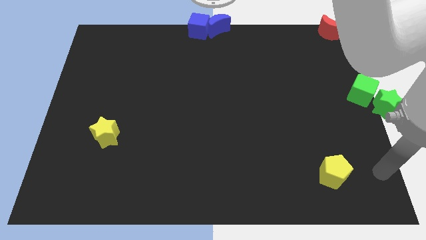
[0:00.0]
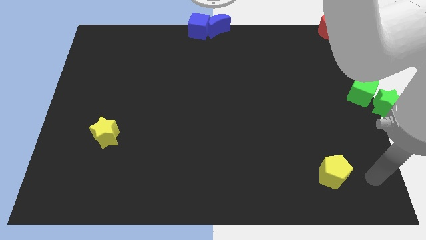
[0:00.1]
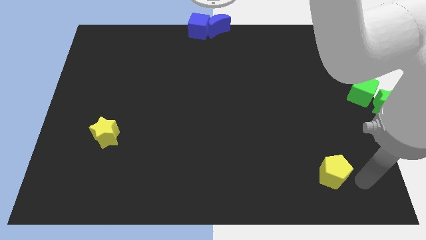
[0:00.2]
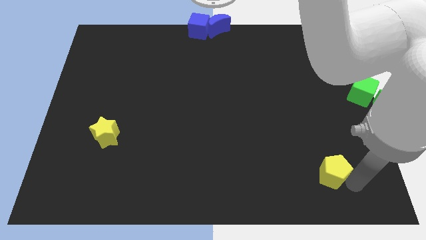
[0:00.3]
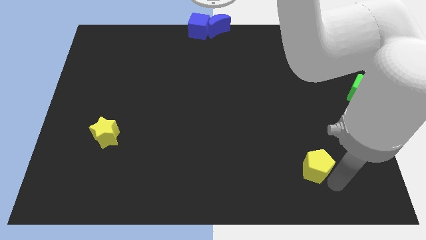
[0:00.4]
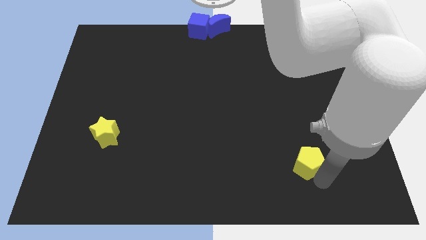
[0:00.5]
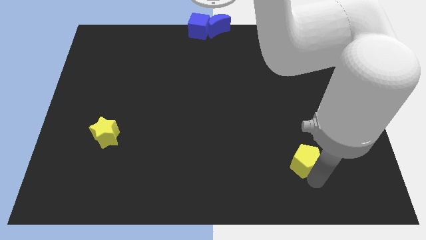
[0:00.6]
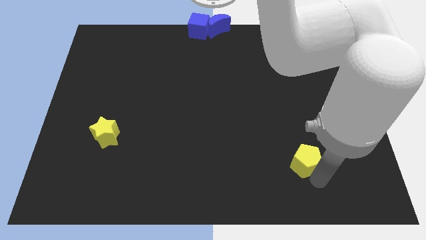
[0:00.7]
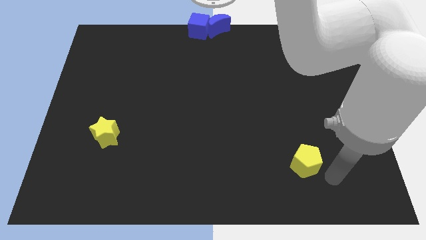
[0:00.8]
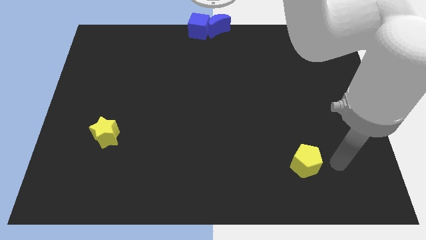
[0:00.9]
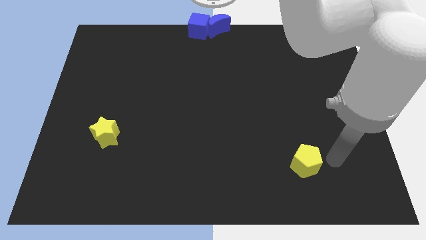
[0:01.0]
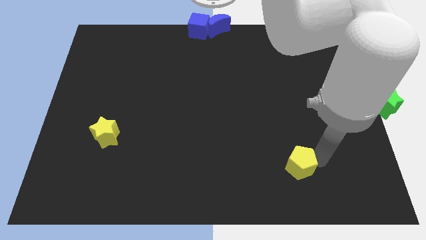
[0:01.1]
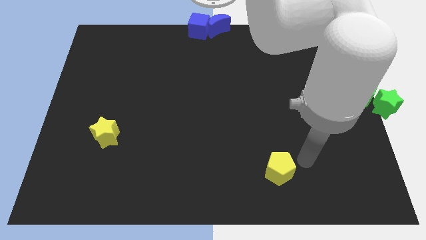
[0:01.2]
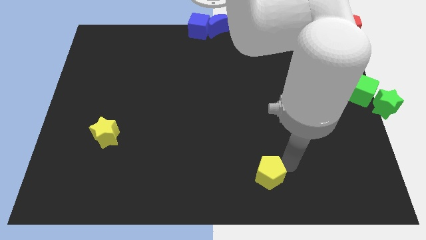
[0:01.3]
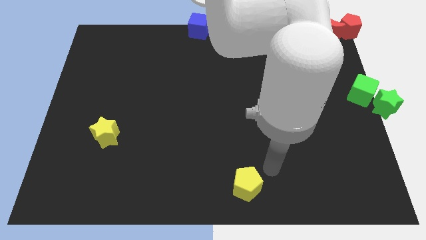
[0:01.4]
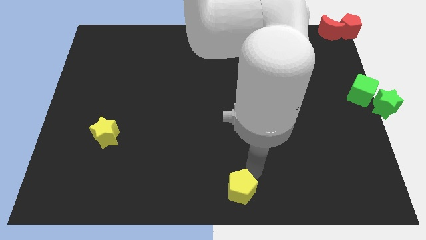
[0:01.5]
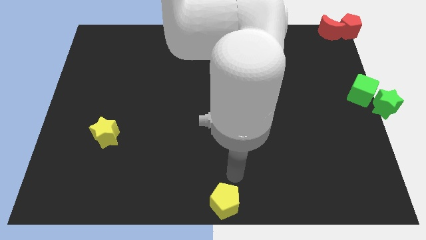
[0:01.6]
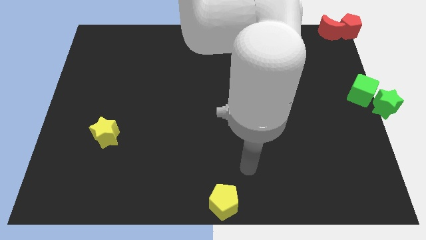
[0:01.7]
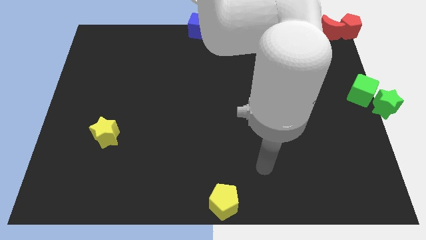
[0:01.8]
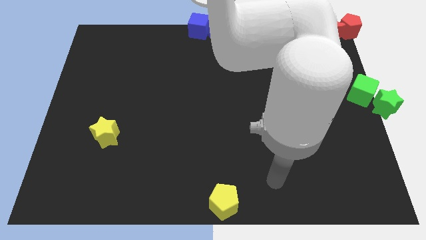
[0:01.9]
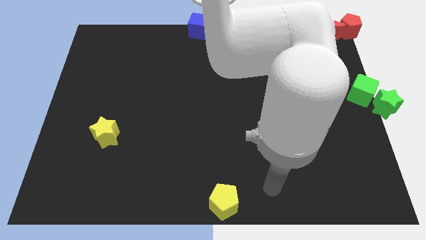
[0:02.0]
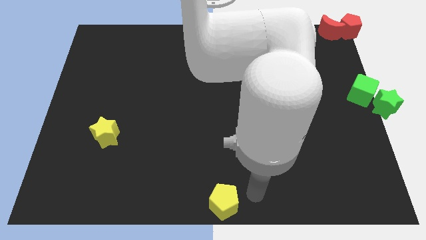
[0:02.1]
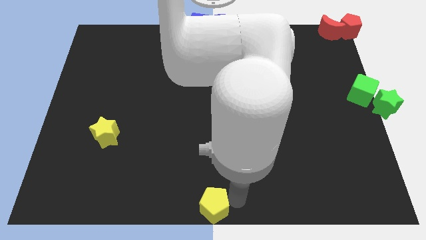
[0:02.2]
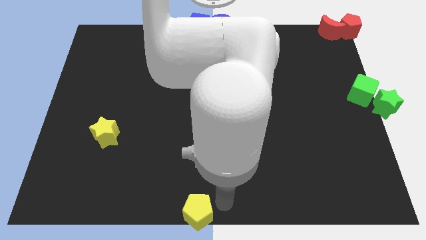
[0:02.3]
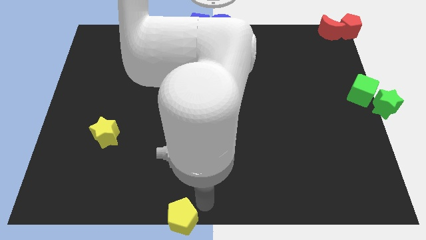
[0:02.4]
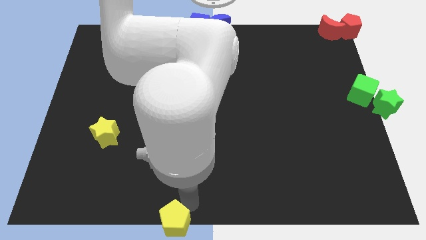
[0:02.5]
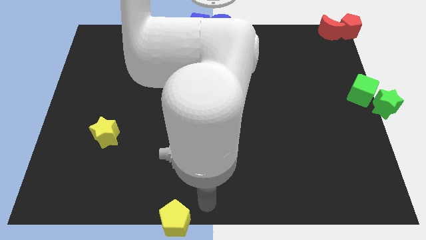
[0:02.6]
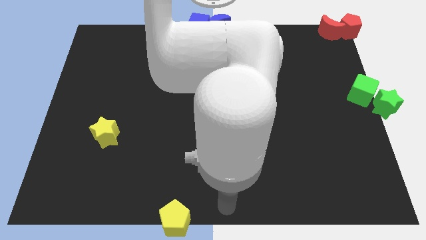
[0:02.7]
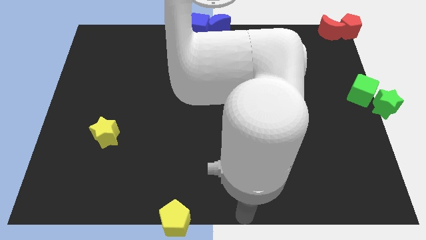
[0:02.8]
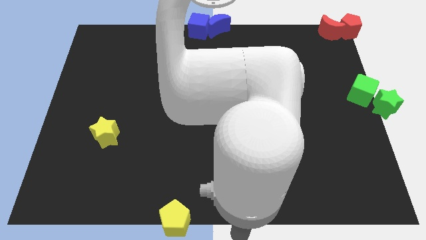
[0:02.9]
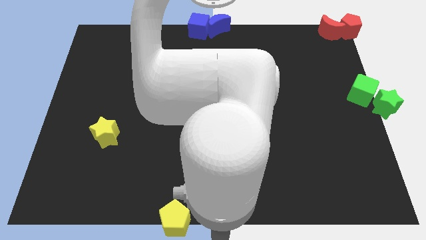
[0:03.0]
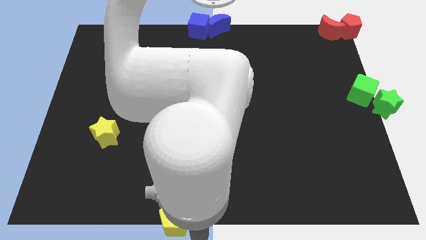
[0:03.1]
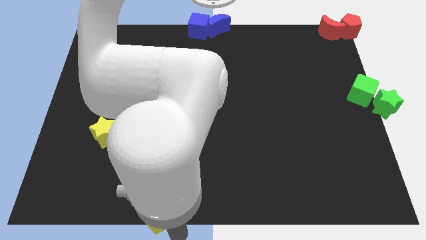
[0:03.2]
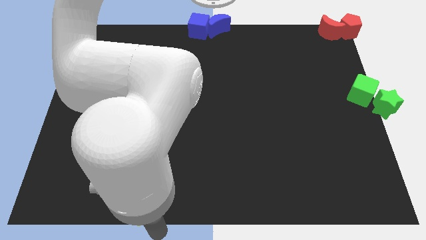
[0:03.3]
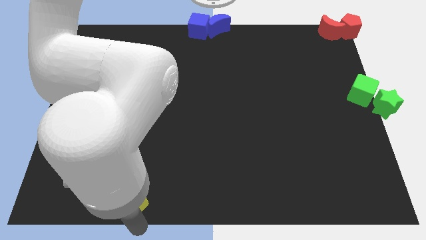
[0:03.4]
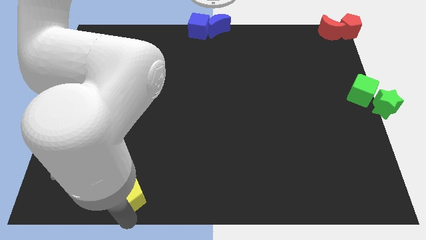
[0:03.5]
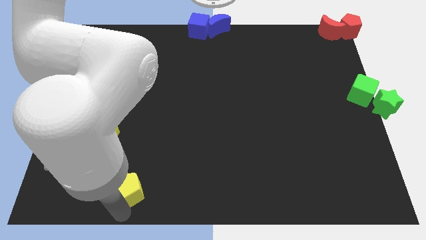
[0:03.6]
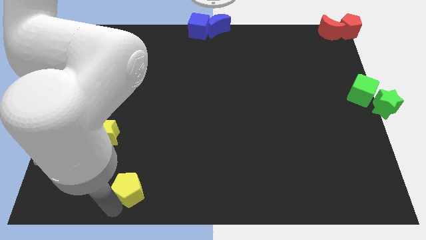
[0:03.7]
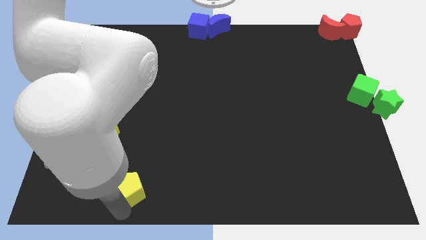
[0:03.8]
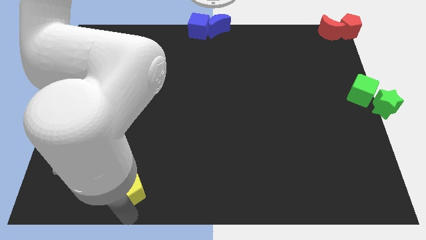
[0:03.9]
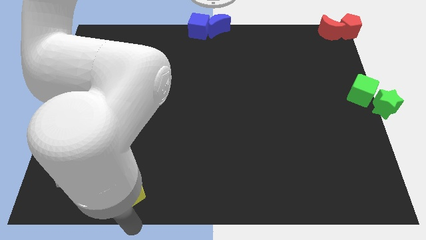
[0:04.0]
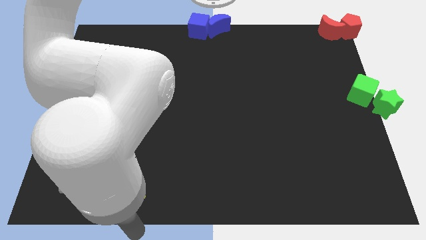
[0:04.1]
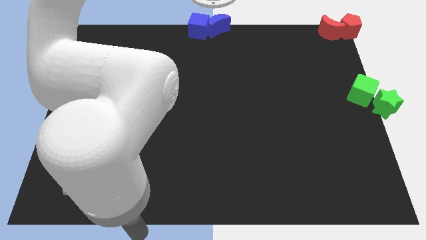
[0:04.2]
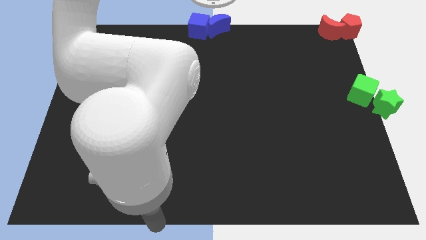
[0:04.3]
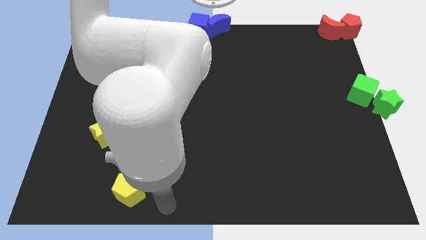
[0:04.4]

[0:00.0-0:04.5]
move the yellow pentagon diagonal below yellow star

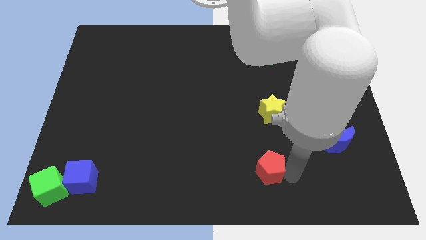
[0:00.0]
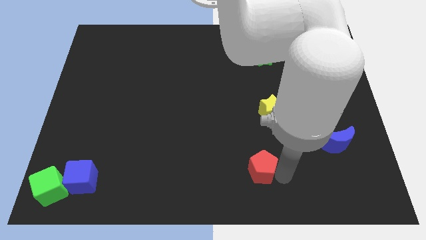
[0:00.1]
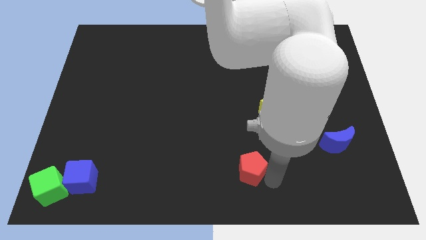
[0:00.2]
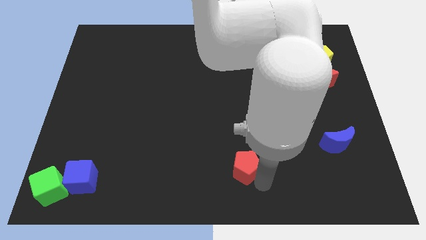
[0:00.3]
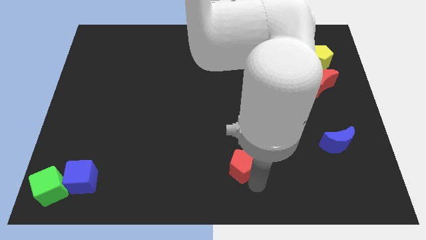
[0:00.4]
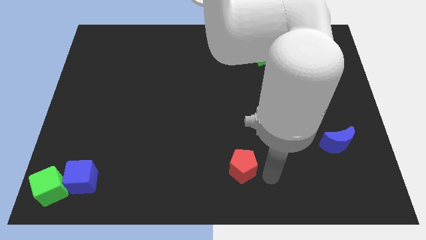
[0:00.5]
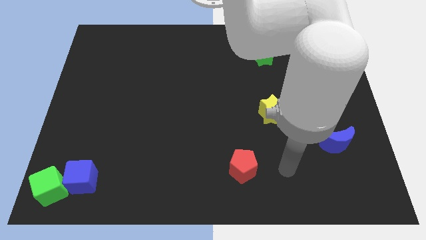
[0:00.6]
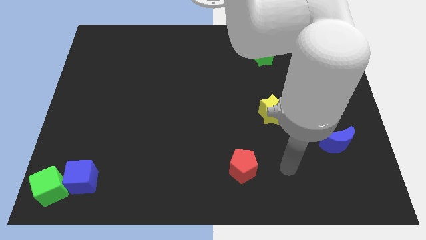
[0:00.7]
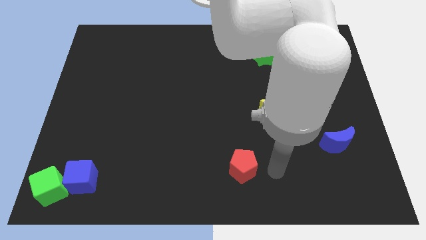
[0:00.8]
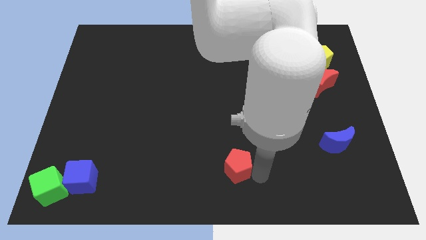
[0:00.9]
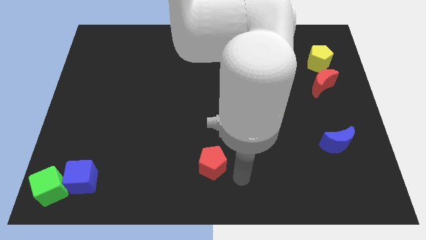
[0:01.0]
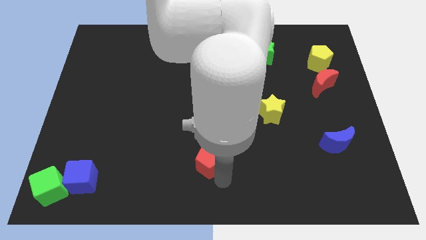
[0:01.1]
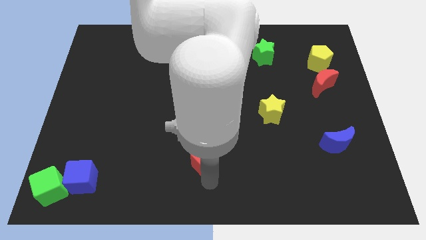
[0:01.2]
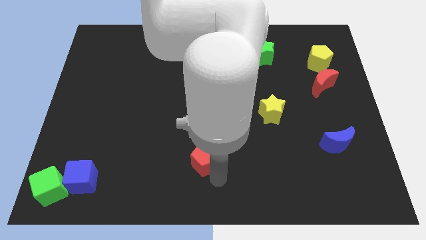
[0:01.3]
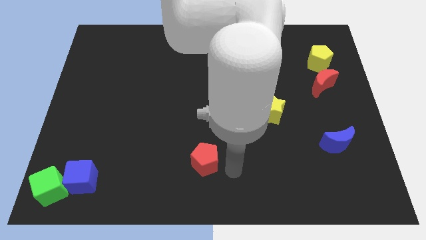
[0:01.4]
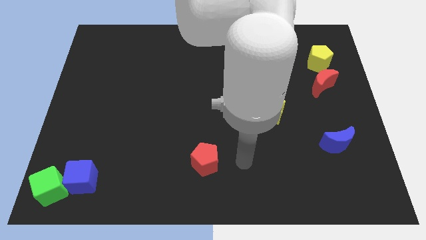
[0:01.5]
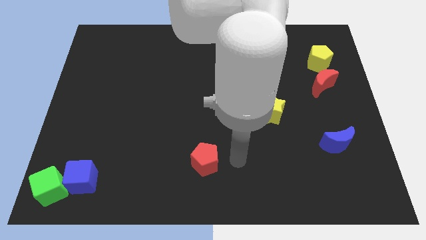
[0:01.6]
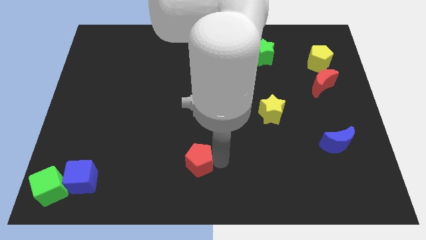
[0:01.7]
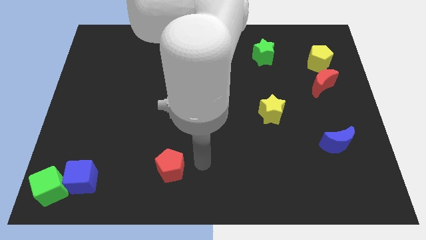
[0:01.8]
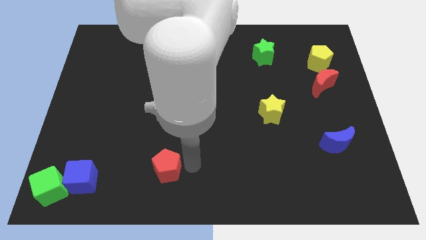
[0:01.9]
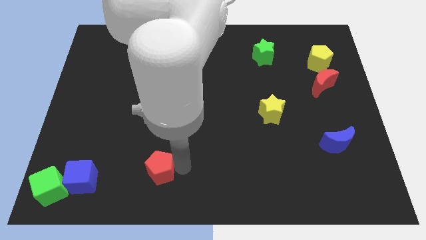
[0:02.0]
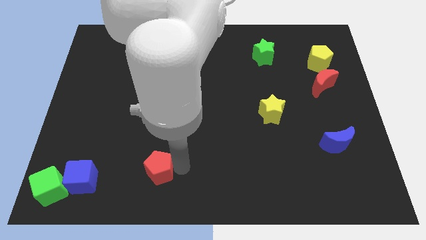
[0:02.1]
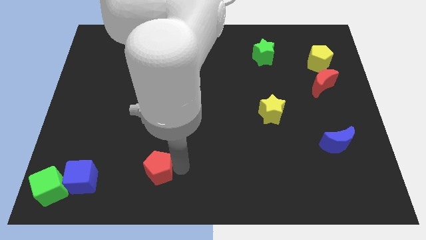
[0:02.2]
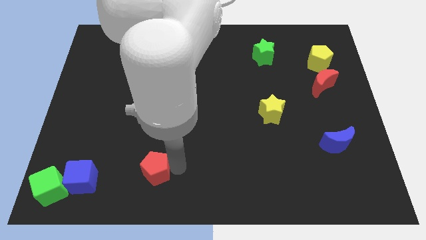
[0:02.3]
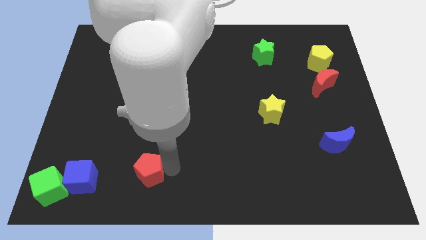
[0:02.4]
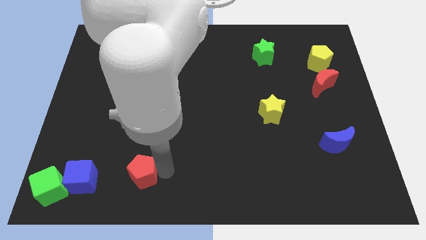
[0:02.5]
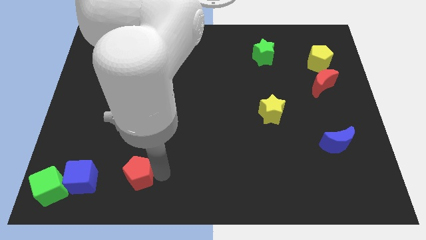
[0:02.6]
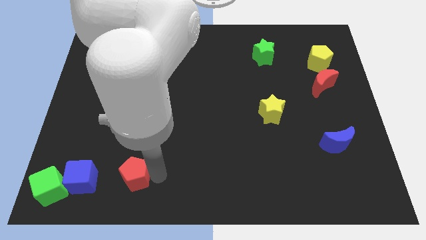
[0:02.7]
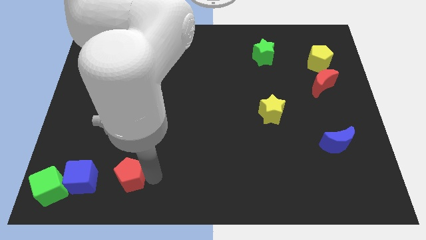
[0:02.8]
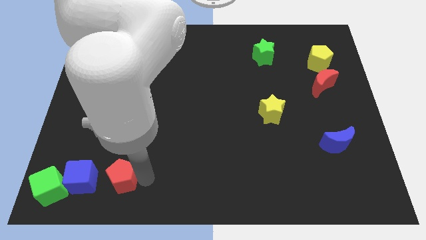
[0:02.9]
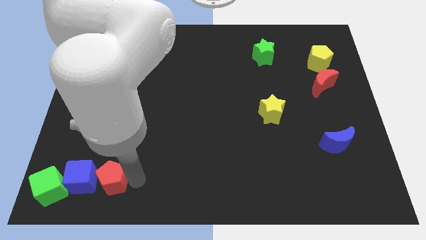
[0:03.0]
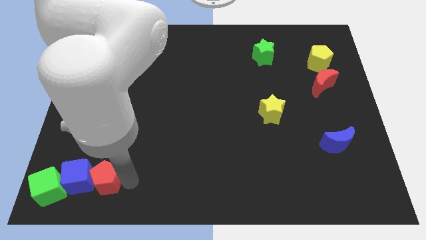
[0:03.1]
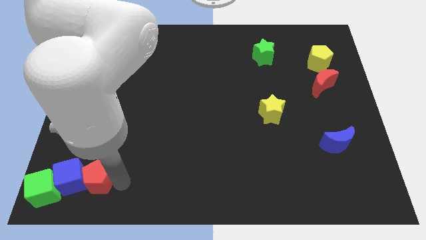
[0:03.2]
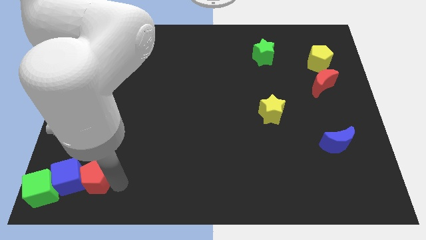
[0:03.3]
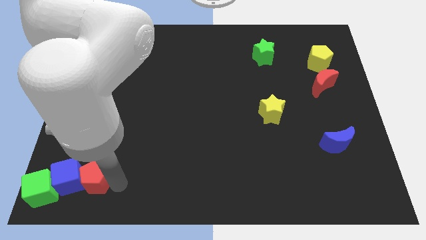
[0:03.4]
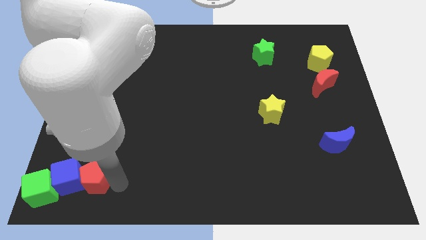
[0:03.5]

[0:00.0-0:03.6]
push the red pentagon right to the blue cube

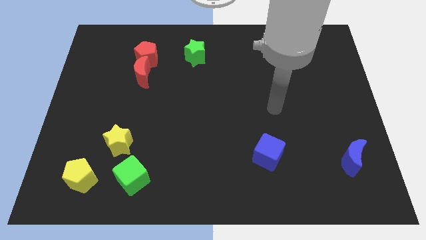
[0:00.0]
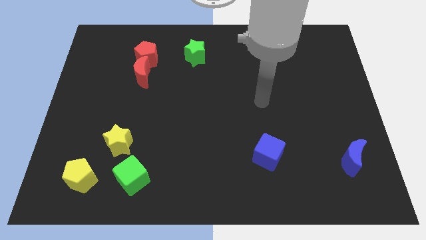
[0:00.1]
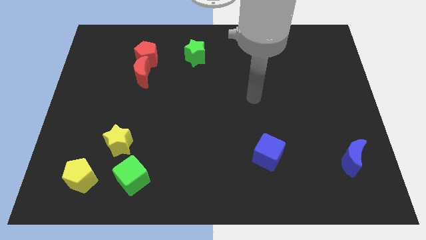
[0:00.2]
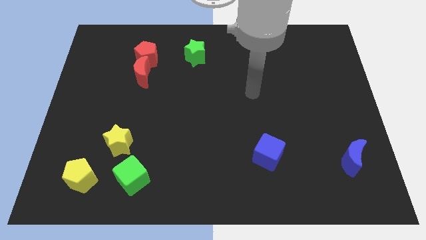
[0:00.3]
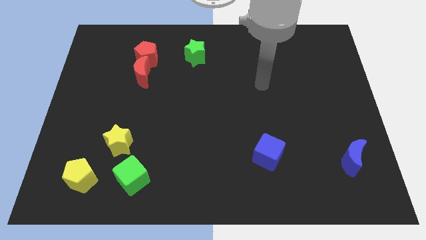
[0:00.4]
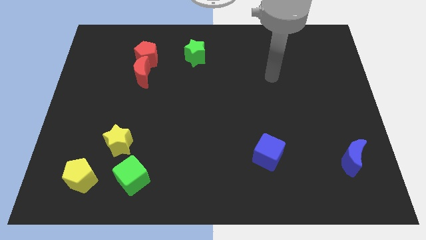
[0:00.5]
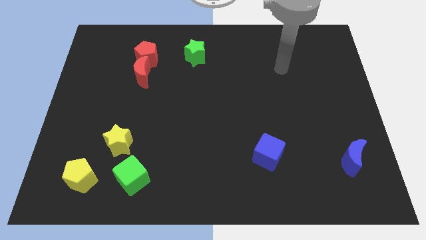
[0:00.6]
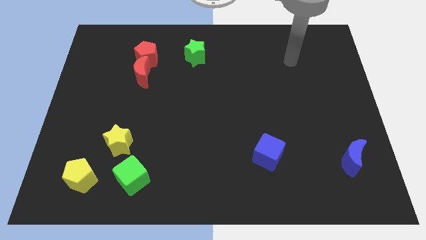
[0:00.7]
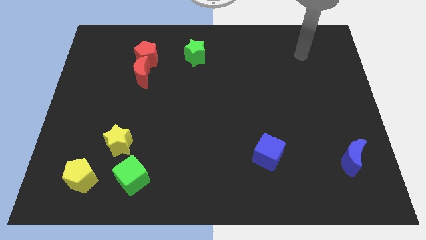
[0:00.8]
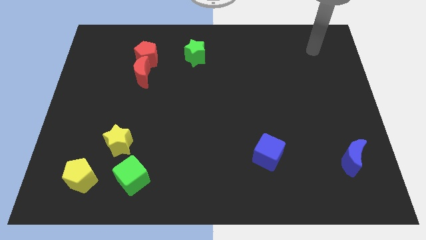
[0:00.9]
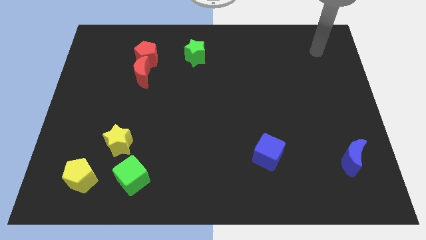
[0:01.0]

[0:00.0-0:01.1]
move your hand to the top right corner of the board
